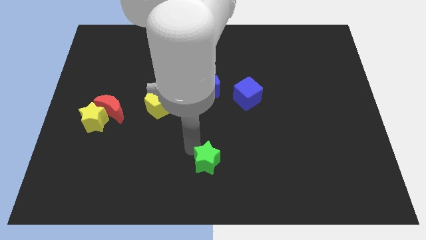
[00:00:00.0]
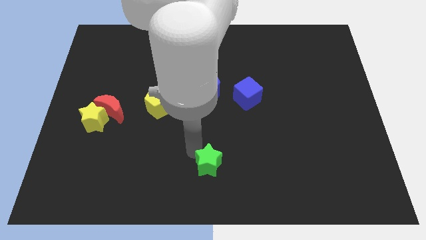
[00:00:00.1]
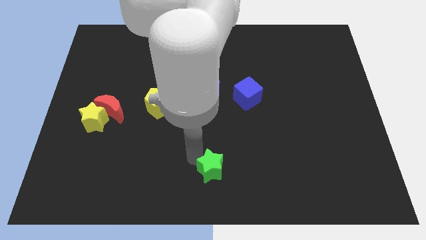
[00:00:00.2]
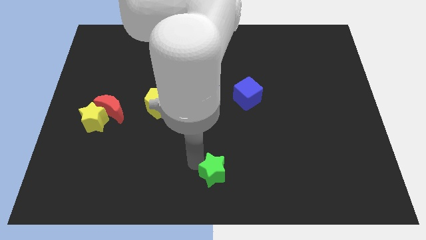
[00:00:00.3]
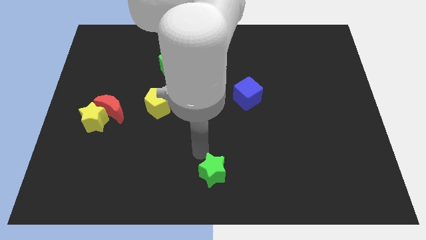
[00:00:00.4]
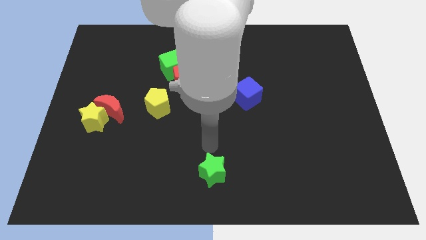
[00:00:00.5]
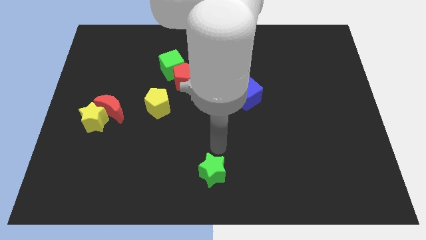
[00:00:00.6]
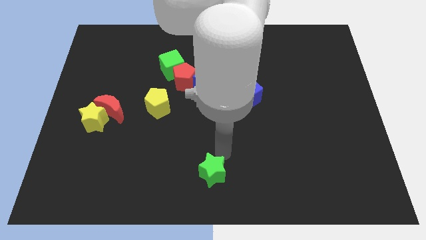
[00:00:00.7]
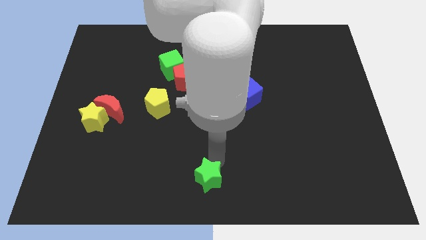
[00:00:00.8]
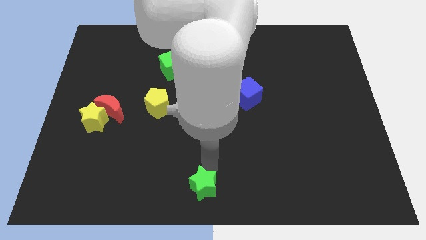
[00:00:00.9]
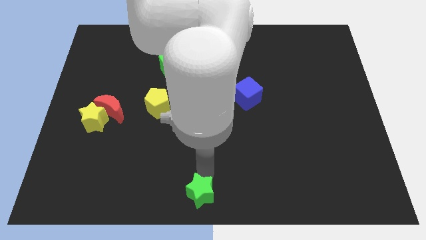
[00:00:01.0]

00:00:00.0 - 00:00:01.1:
push the green star to the bottom center of the board

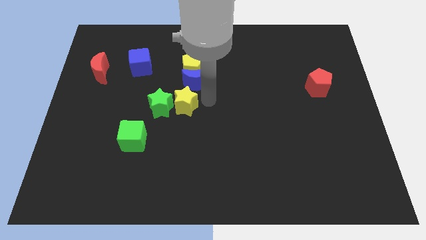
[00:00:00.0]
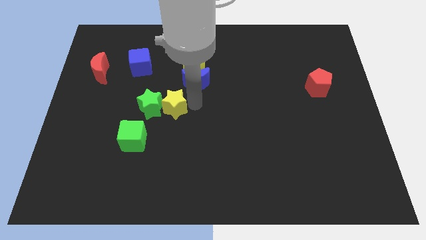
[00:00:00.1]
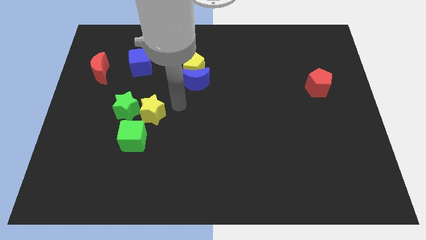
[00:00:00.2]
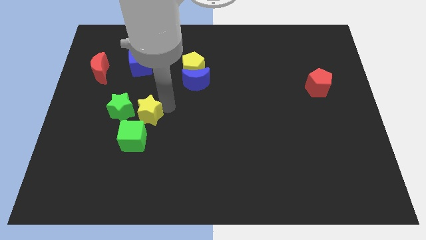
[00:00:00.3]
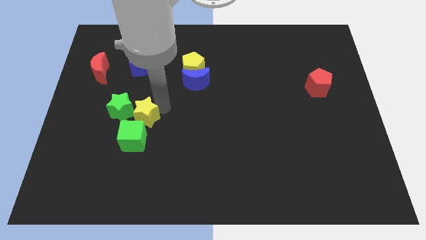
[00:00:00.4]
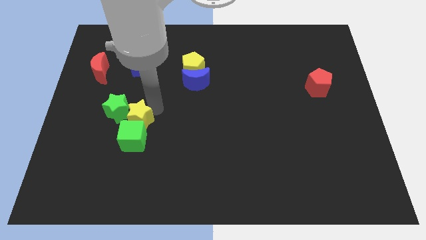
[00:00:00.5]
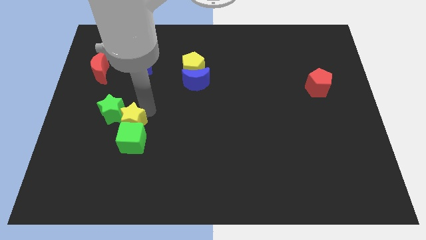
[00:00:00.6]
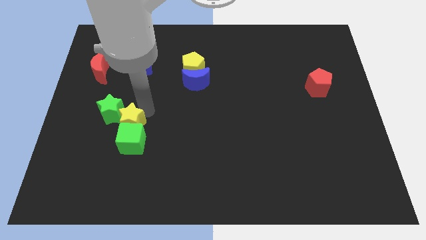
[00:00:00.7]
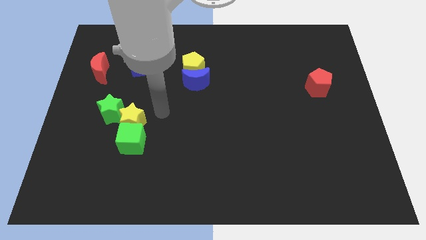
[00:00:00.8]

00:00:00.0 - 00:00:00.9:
place the yellow star above the green cube

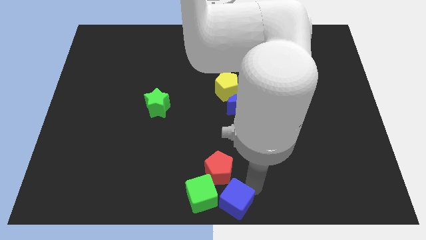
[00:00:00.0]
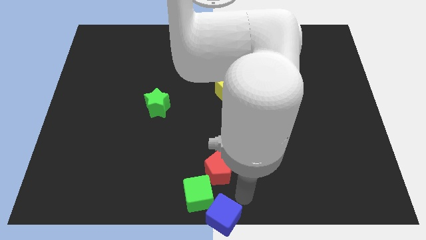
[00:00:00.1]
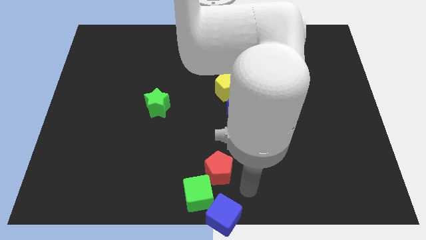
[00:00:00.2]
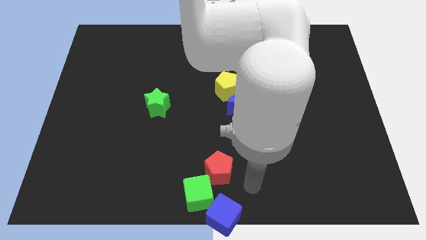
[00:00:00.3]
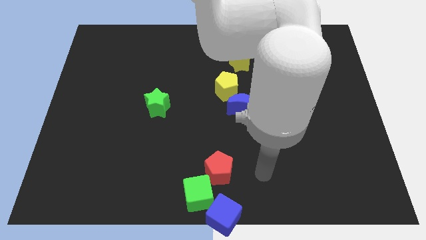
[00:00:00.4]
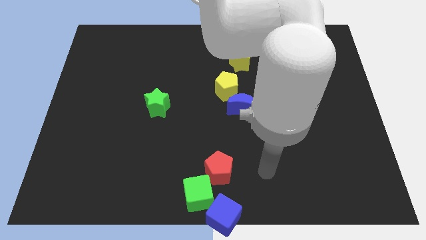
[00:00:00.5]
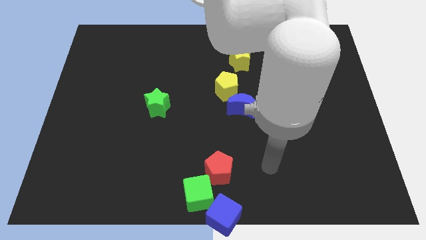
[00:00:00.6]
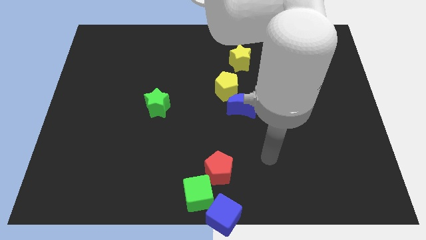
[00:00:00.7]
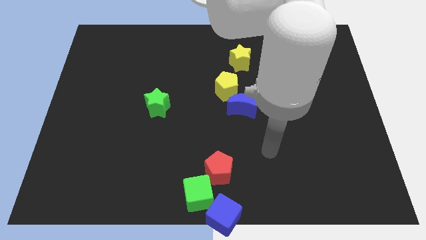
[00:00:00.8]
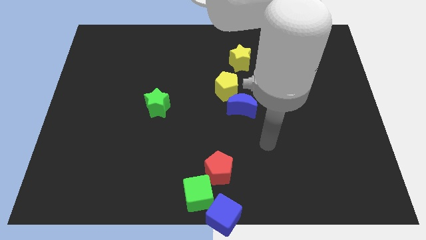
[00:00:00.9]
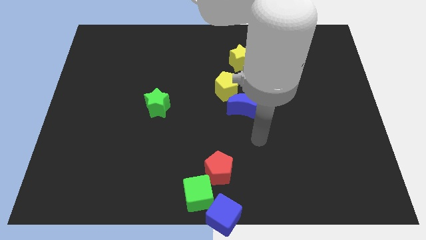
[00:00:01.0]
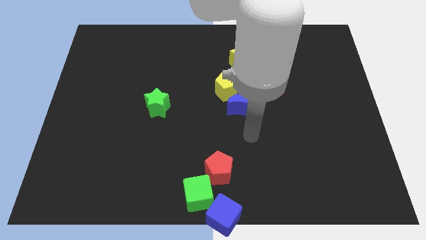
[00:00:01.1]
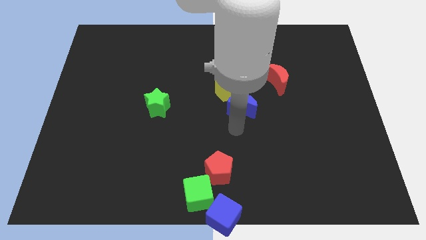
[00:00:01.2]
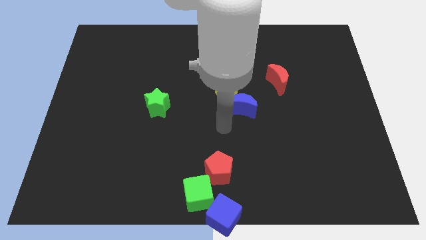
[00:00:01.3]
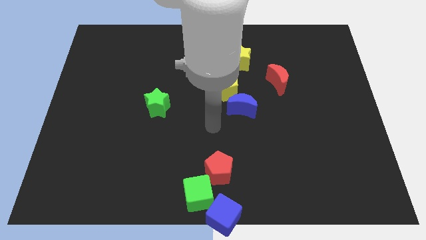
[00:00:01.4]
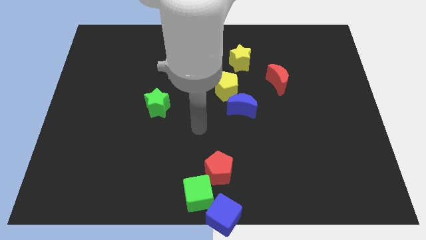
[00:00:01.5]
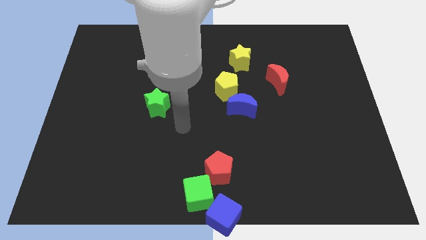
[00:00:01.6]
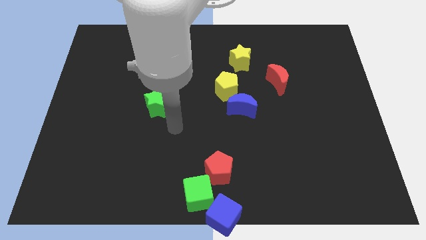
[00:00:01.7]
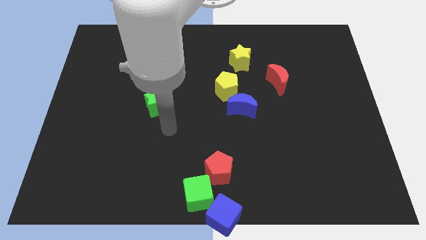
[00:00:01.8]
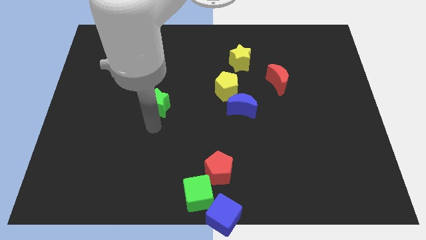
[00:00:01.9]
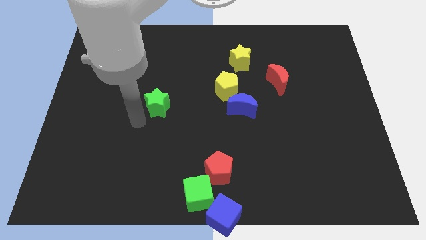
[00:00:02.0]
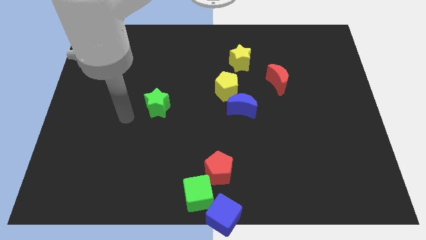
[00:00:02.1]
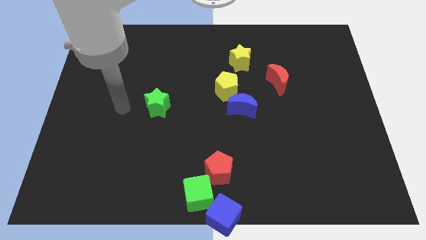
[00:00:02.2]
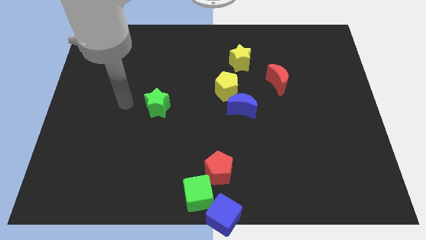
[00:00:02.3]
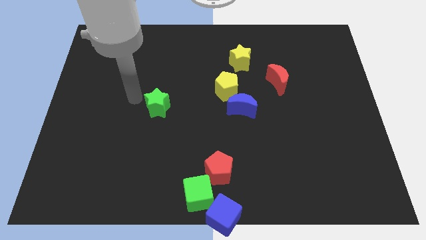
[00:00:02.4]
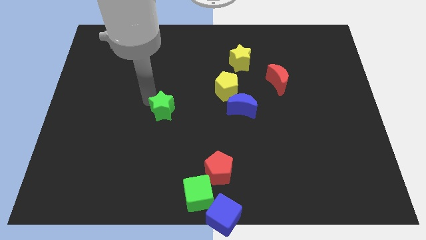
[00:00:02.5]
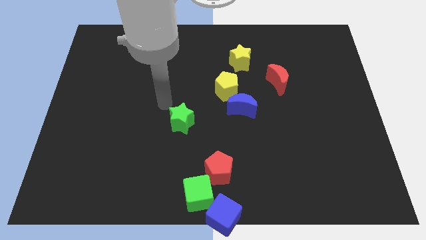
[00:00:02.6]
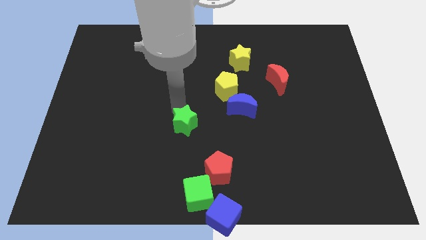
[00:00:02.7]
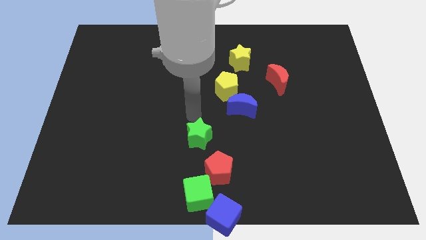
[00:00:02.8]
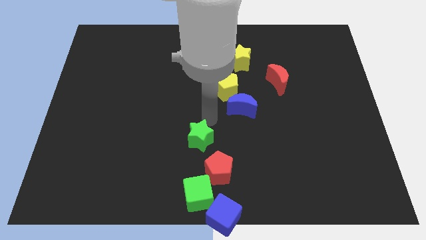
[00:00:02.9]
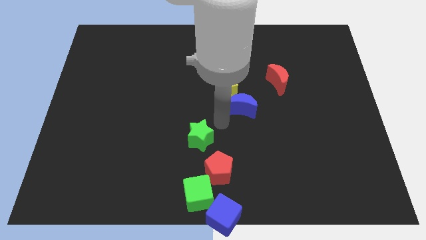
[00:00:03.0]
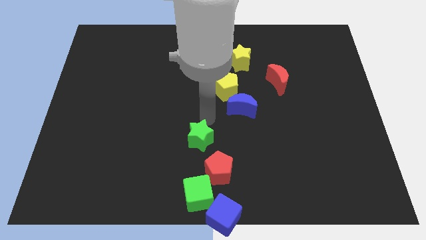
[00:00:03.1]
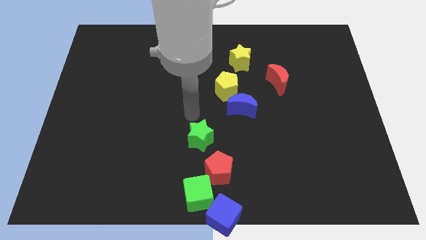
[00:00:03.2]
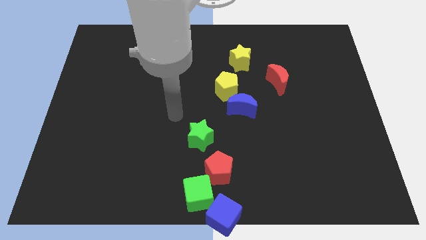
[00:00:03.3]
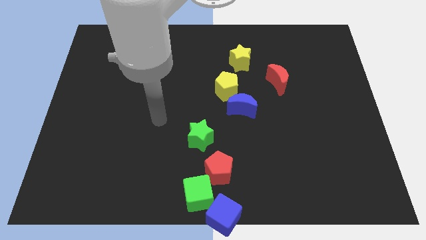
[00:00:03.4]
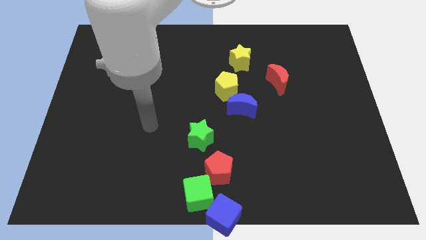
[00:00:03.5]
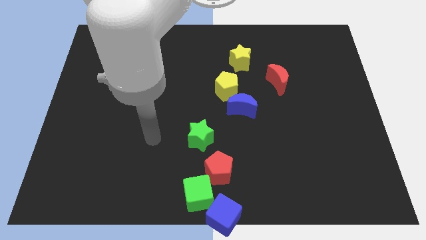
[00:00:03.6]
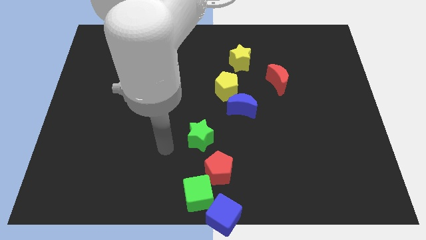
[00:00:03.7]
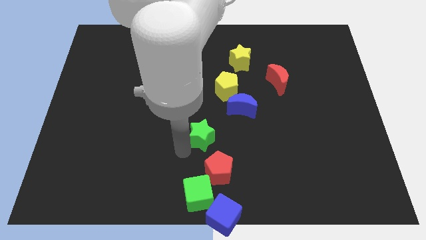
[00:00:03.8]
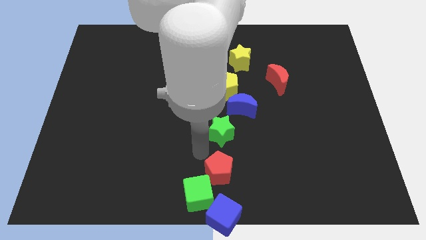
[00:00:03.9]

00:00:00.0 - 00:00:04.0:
move the green star vertically to the top of the red pentagon

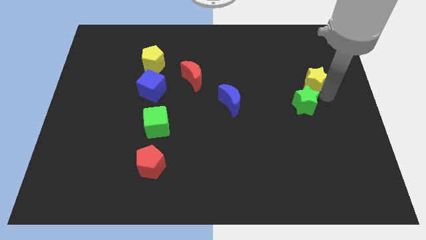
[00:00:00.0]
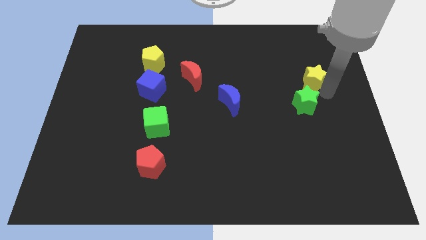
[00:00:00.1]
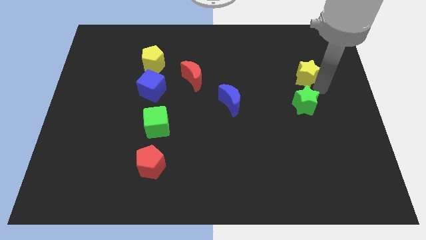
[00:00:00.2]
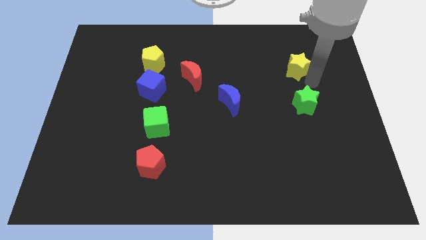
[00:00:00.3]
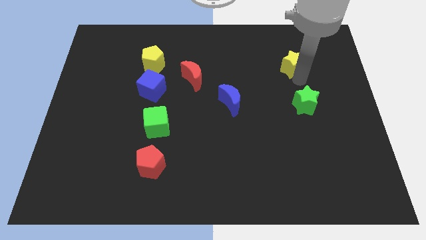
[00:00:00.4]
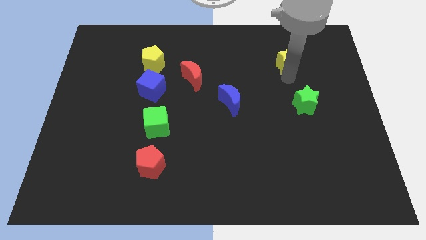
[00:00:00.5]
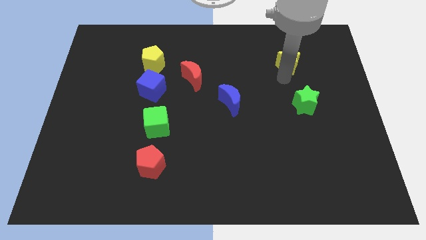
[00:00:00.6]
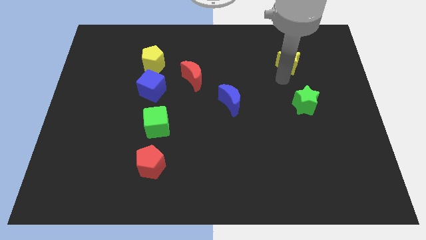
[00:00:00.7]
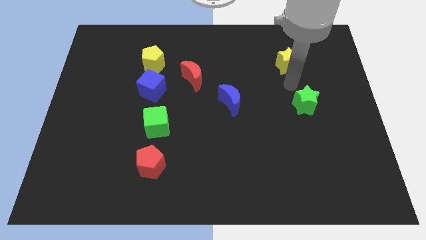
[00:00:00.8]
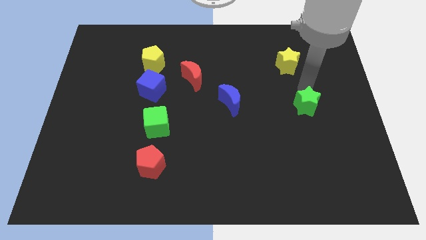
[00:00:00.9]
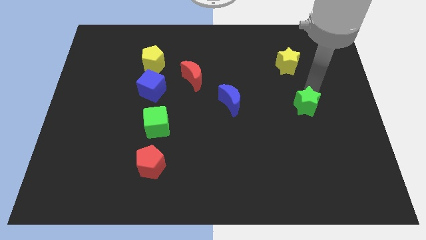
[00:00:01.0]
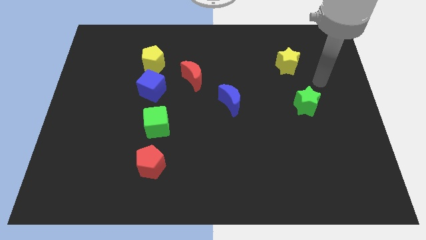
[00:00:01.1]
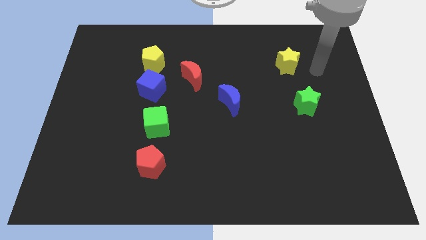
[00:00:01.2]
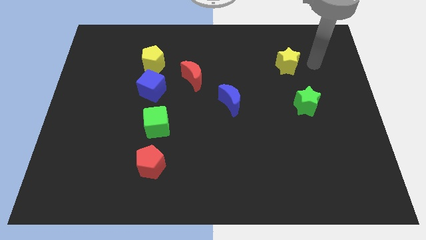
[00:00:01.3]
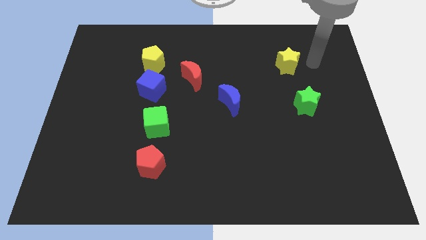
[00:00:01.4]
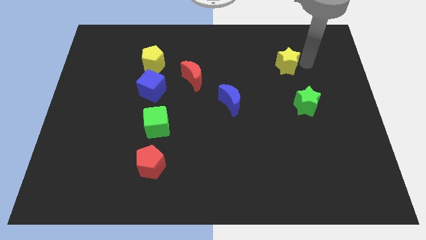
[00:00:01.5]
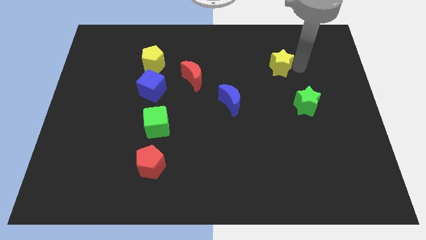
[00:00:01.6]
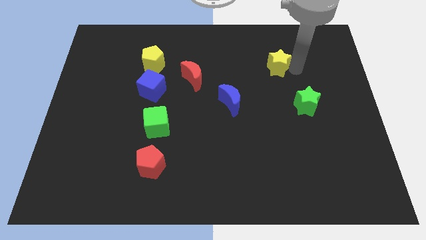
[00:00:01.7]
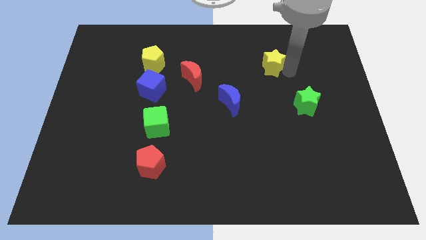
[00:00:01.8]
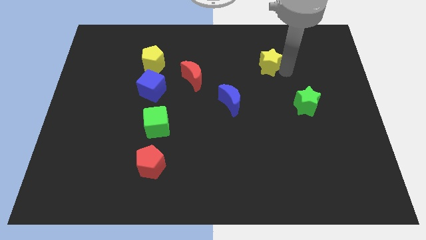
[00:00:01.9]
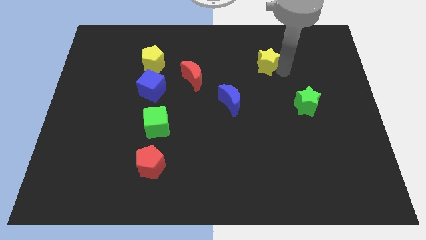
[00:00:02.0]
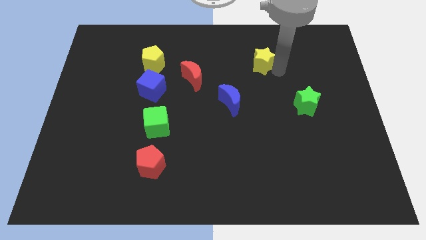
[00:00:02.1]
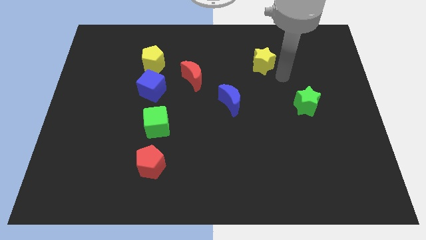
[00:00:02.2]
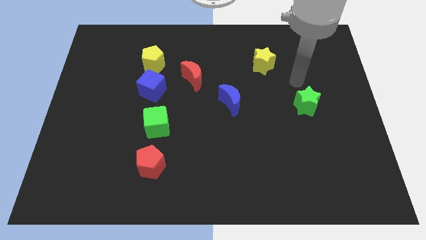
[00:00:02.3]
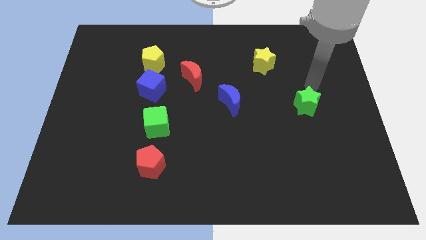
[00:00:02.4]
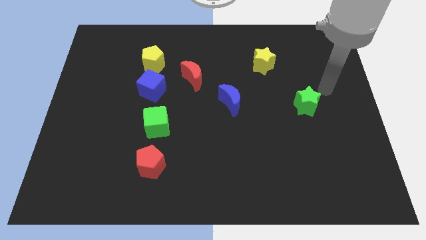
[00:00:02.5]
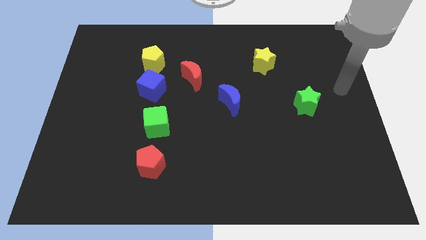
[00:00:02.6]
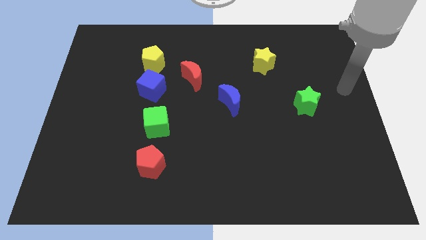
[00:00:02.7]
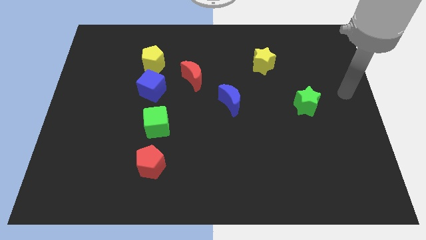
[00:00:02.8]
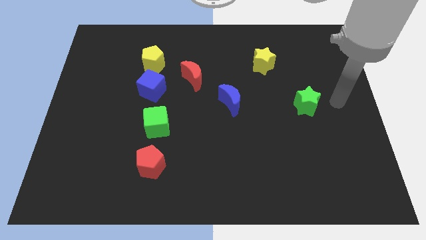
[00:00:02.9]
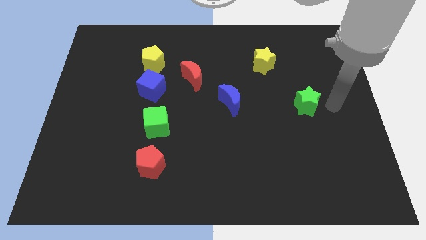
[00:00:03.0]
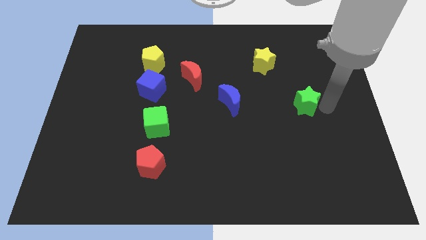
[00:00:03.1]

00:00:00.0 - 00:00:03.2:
make a triangle out of yellow star red and the blue moon
